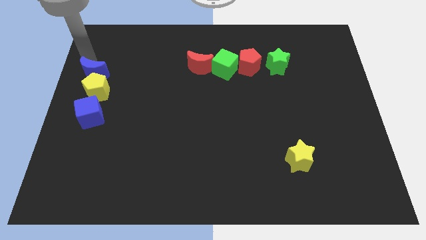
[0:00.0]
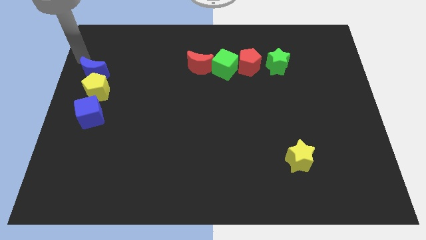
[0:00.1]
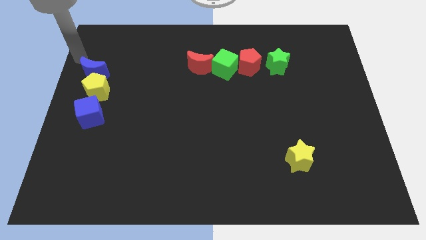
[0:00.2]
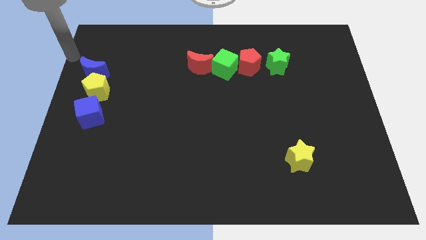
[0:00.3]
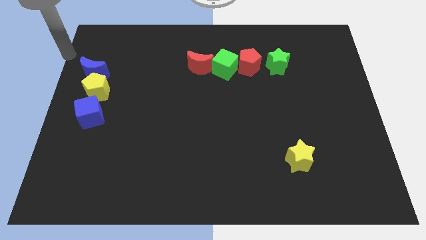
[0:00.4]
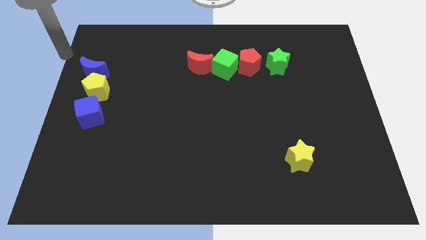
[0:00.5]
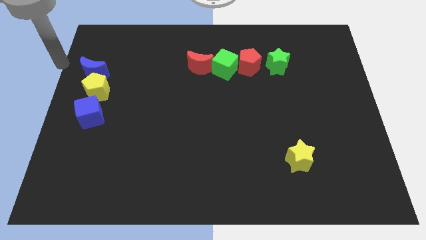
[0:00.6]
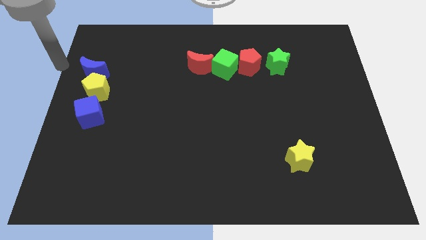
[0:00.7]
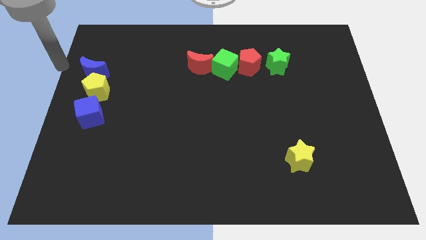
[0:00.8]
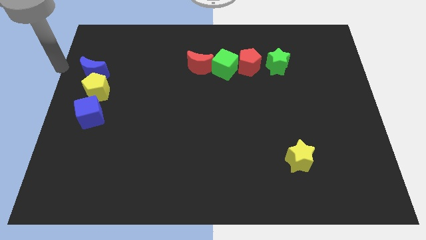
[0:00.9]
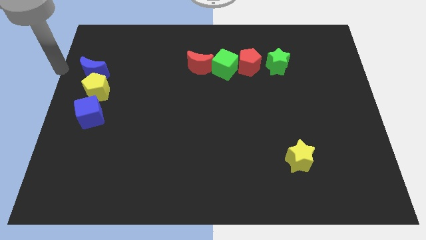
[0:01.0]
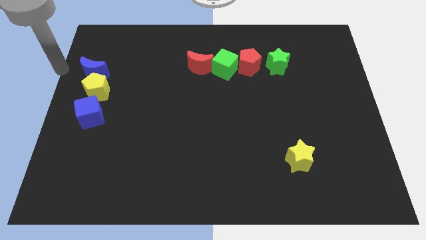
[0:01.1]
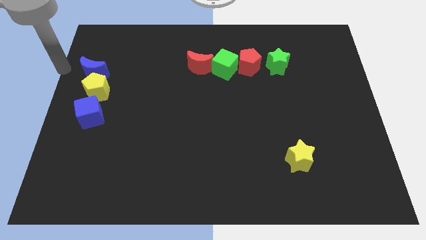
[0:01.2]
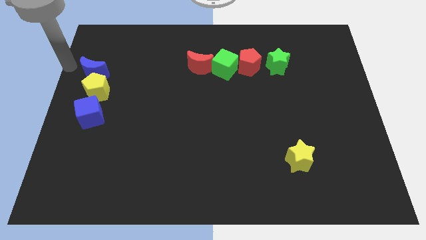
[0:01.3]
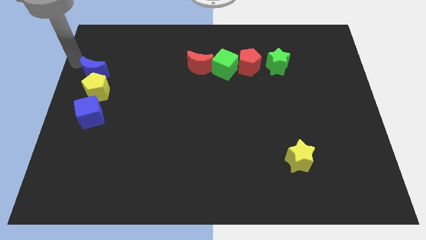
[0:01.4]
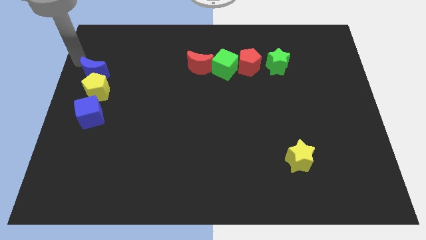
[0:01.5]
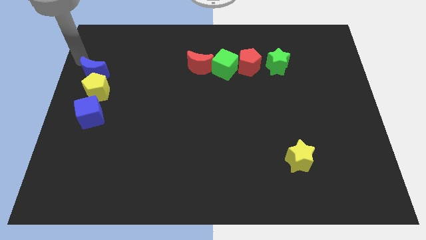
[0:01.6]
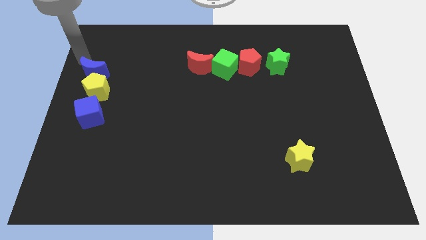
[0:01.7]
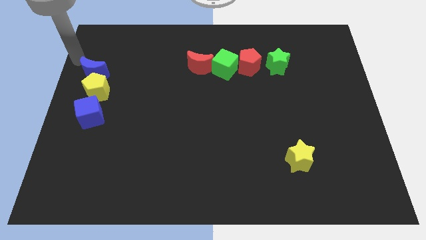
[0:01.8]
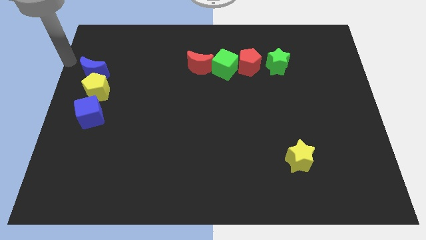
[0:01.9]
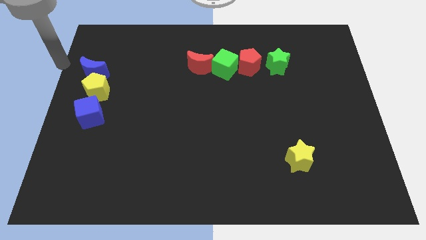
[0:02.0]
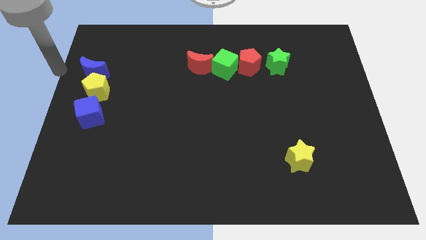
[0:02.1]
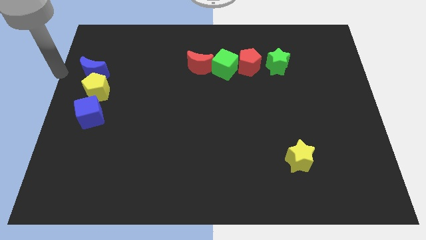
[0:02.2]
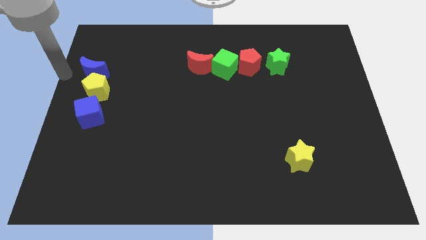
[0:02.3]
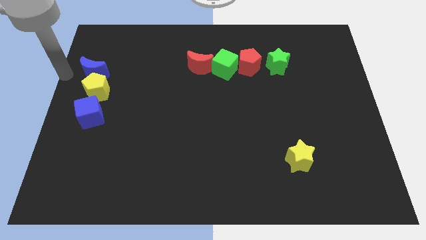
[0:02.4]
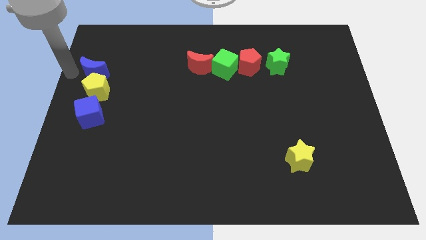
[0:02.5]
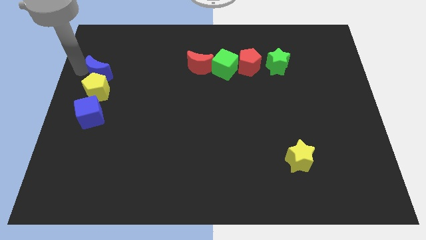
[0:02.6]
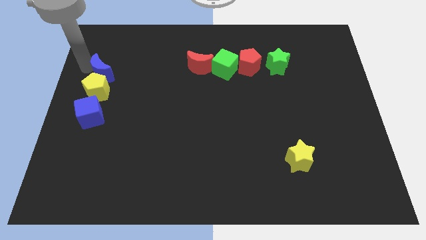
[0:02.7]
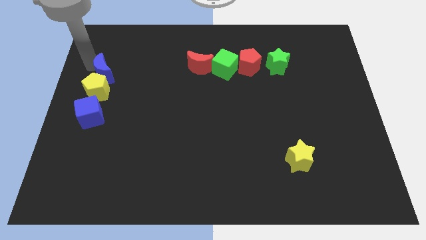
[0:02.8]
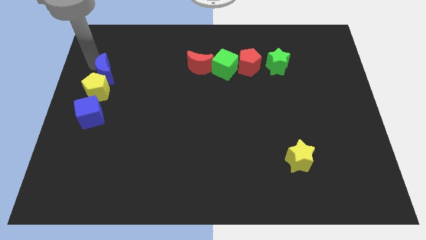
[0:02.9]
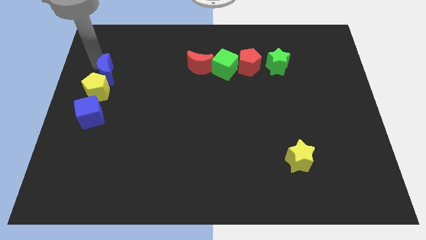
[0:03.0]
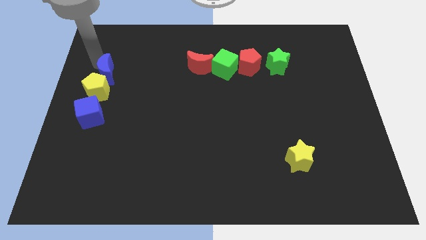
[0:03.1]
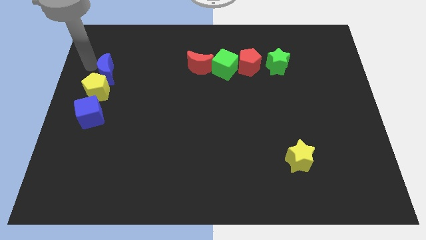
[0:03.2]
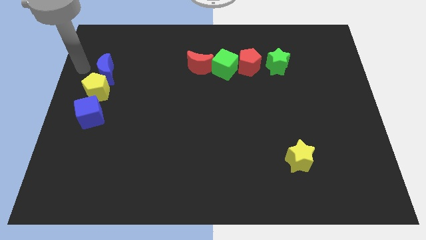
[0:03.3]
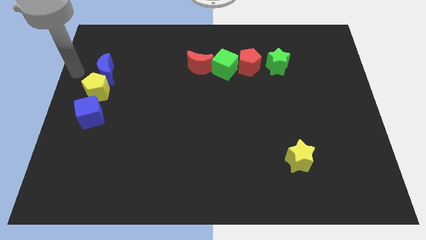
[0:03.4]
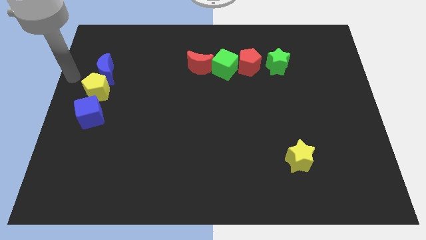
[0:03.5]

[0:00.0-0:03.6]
slightly push the blue moon towards the right

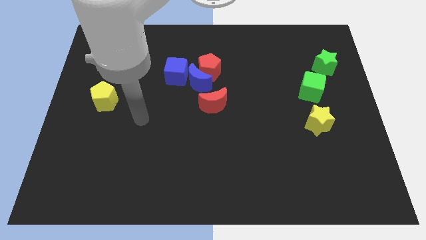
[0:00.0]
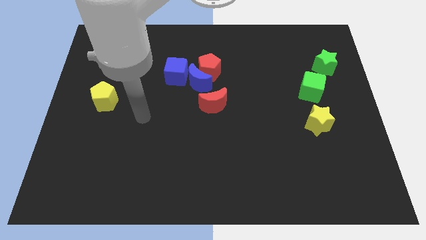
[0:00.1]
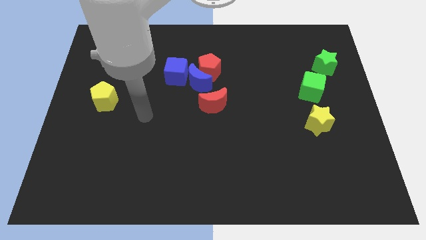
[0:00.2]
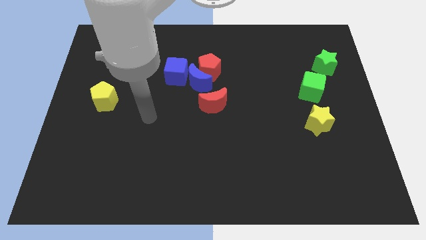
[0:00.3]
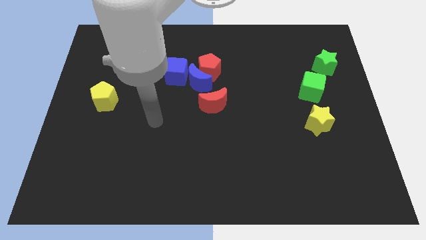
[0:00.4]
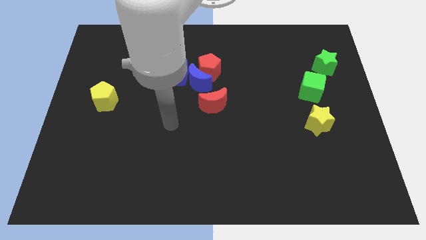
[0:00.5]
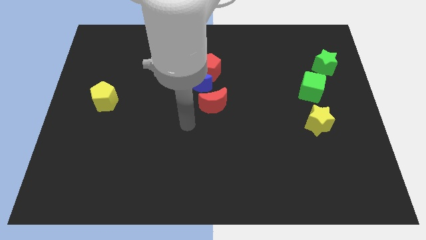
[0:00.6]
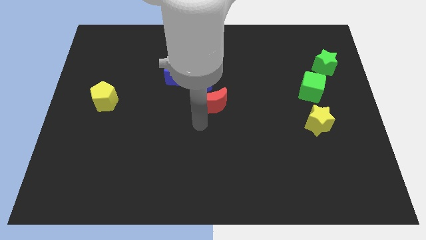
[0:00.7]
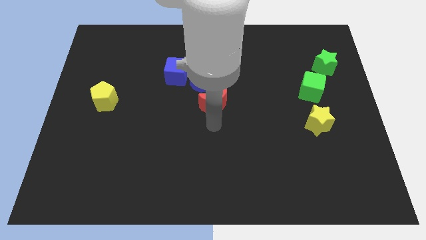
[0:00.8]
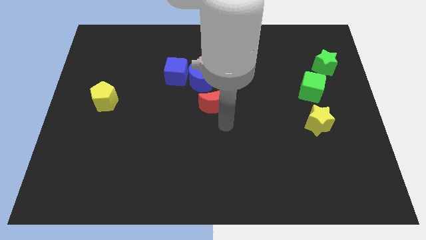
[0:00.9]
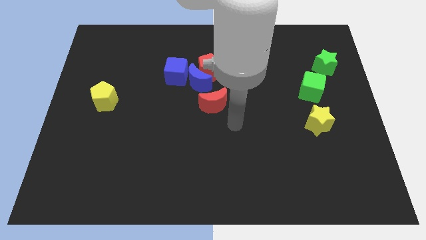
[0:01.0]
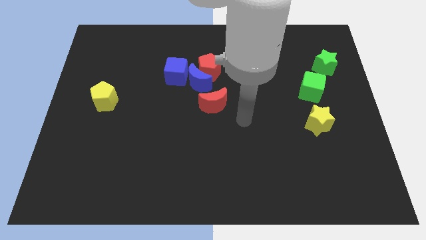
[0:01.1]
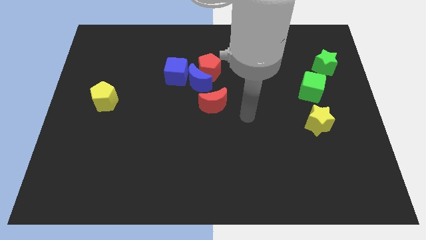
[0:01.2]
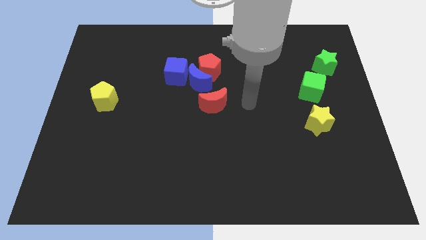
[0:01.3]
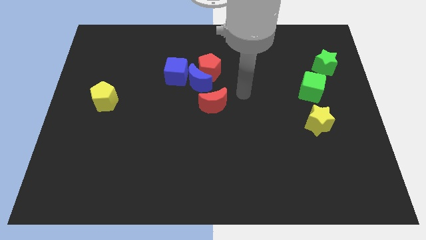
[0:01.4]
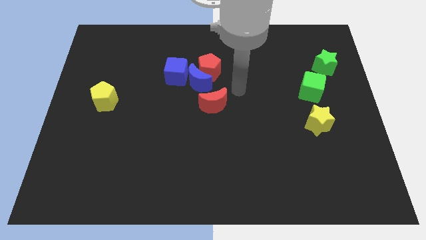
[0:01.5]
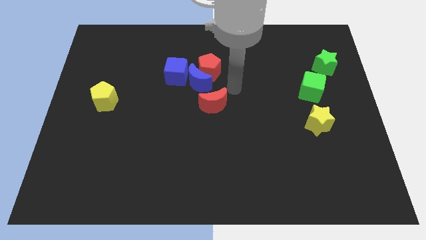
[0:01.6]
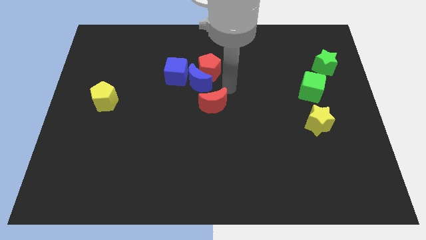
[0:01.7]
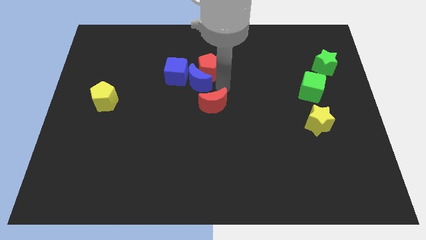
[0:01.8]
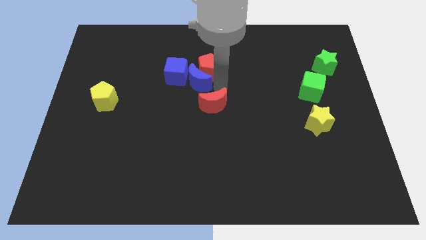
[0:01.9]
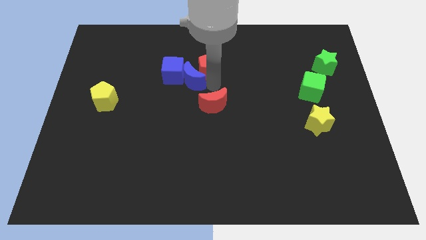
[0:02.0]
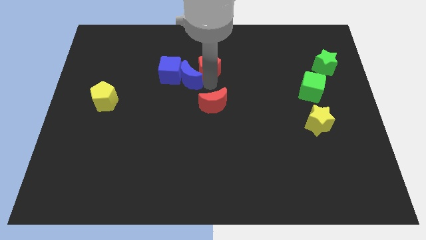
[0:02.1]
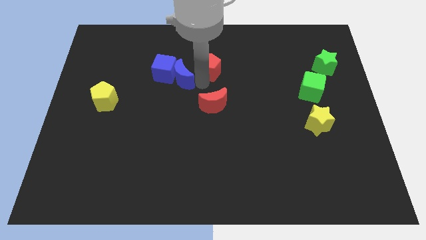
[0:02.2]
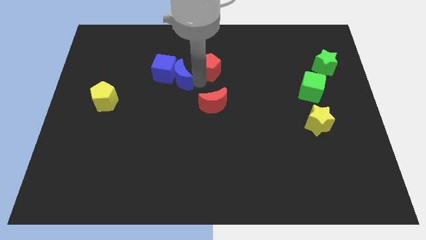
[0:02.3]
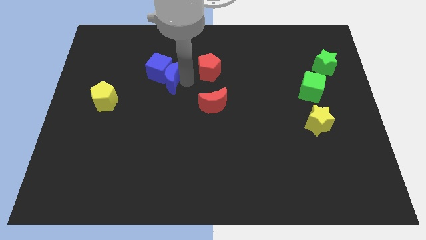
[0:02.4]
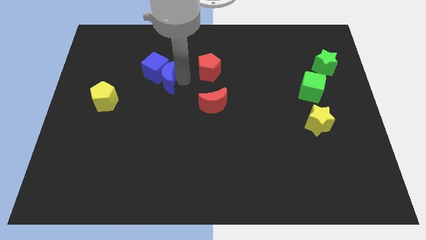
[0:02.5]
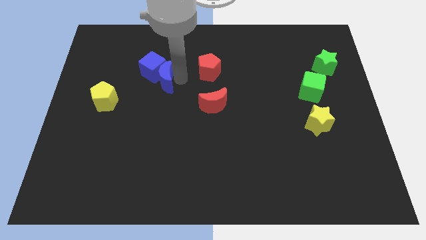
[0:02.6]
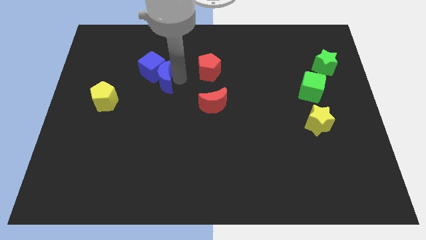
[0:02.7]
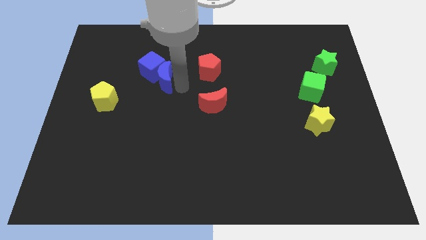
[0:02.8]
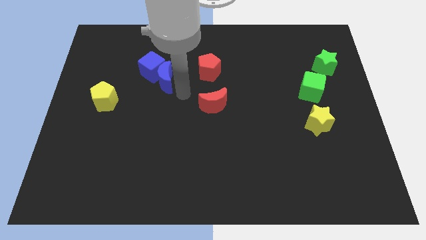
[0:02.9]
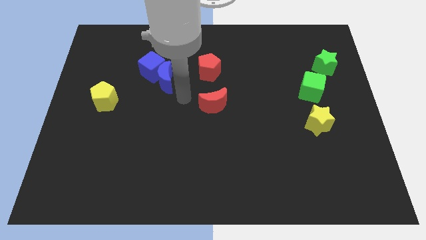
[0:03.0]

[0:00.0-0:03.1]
separate blue blocks from red blocks

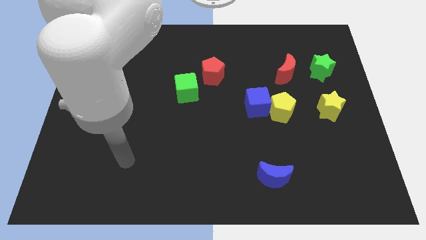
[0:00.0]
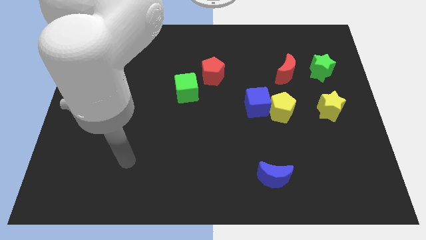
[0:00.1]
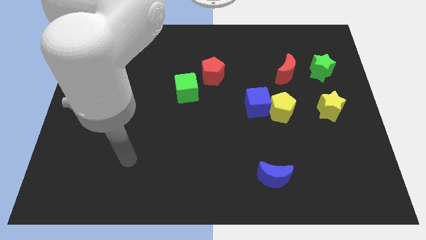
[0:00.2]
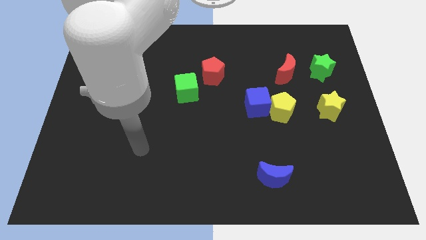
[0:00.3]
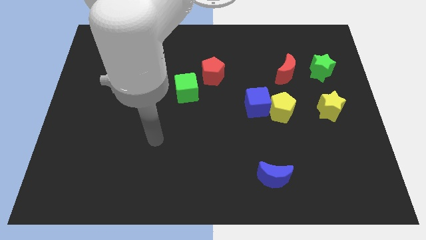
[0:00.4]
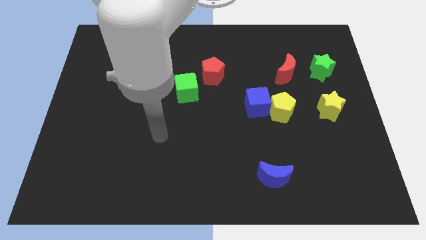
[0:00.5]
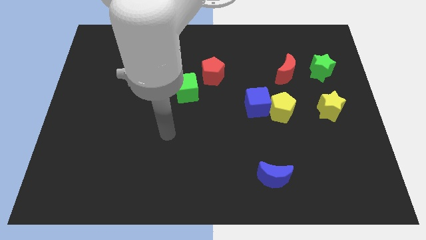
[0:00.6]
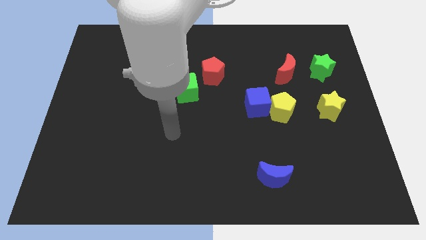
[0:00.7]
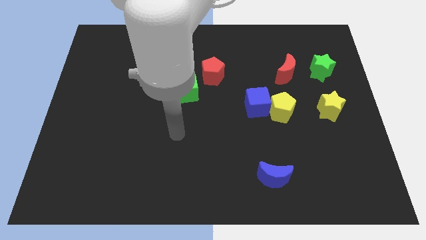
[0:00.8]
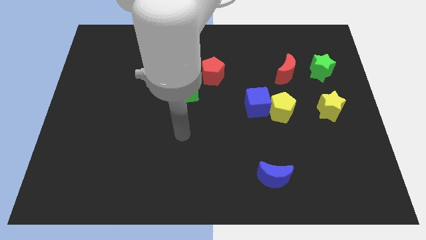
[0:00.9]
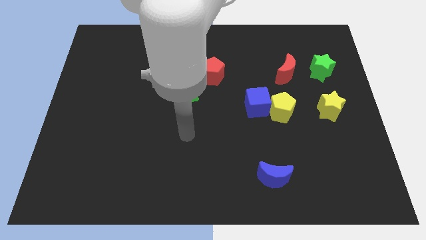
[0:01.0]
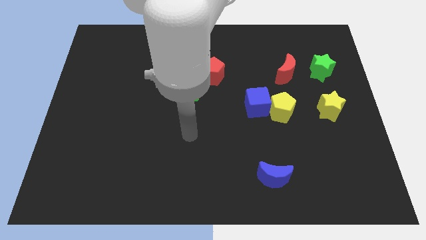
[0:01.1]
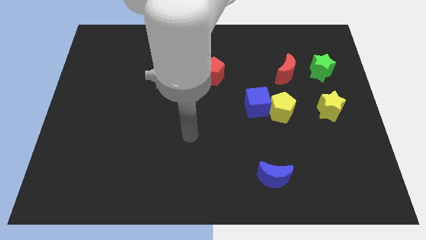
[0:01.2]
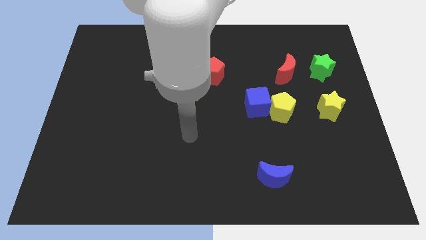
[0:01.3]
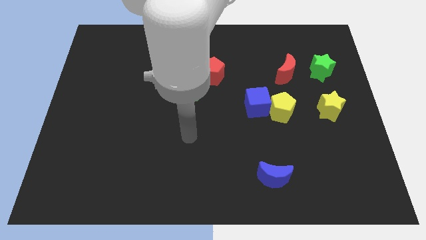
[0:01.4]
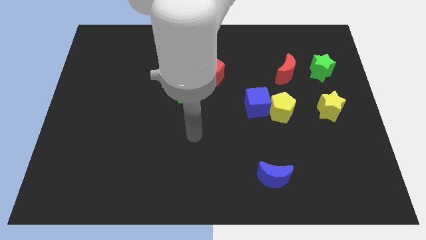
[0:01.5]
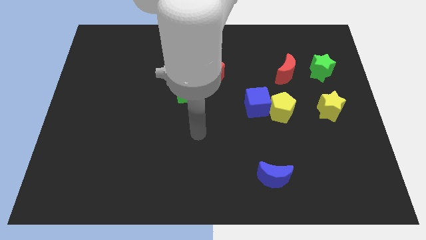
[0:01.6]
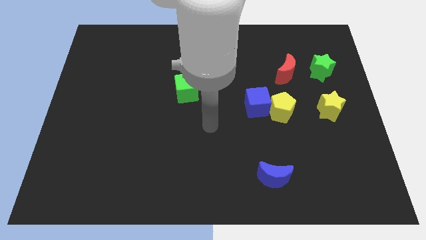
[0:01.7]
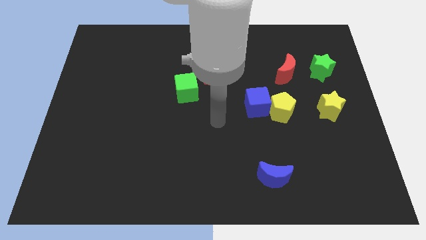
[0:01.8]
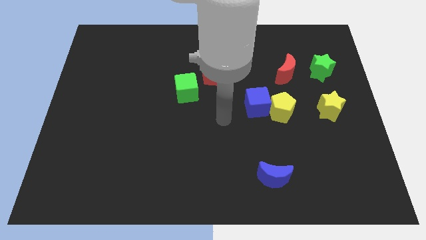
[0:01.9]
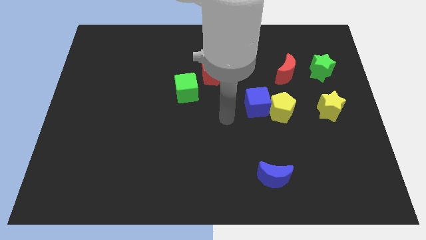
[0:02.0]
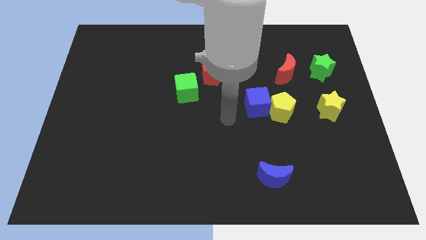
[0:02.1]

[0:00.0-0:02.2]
move your arm close to the blue cube
